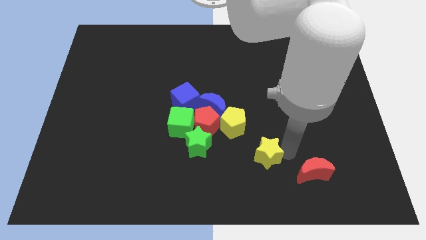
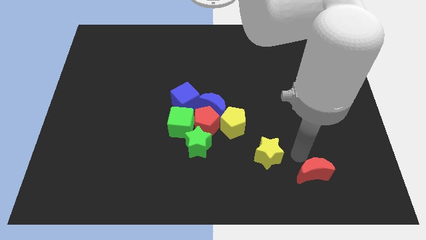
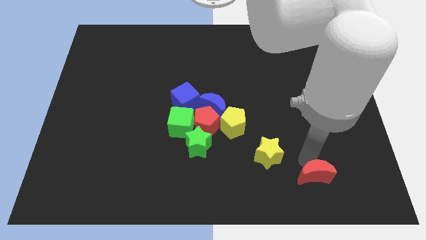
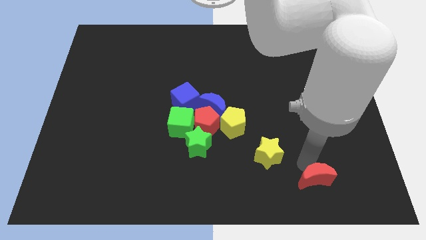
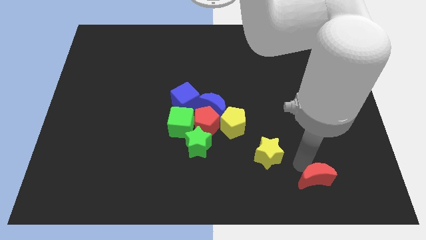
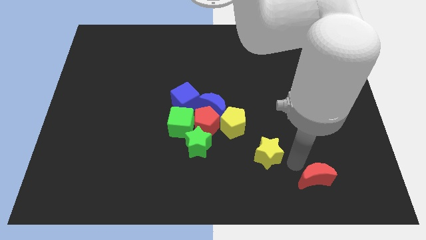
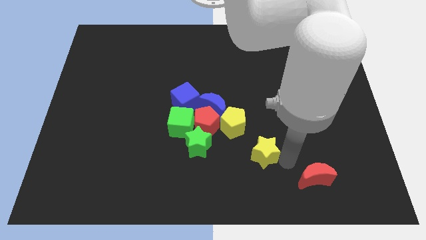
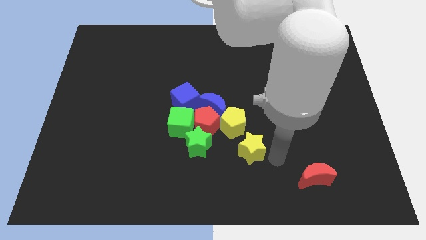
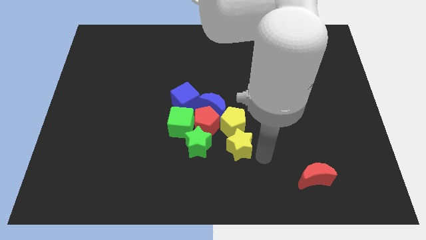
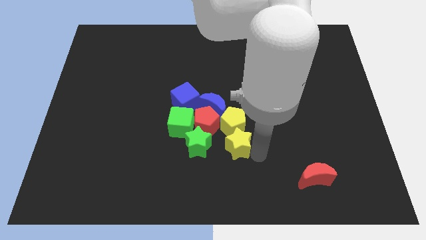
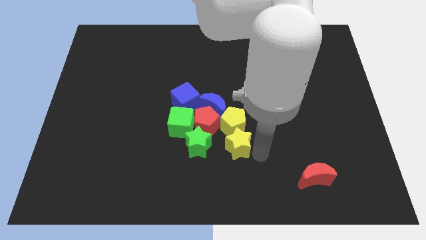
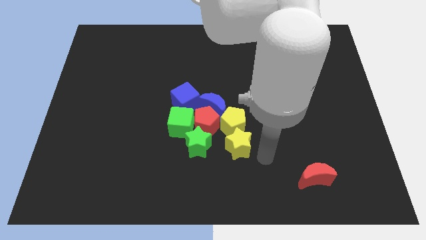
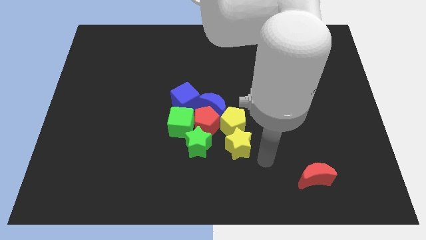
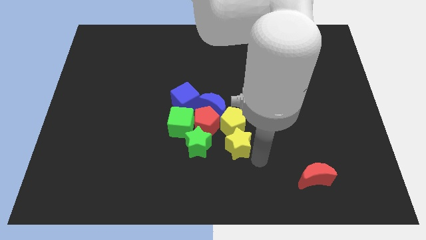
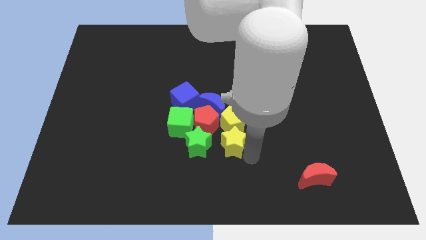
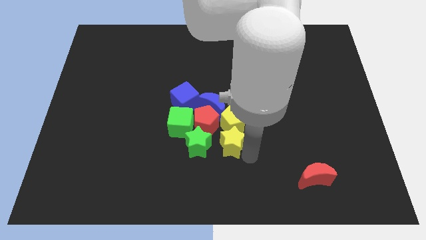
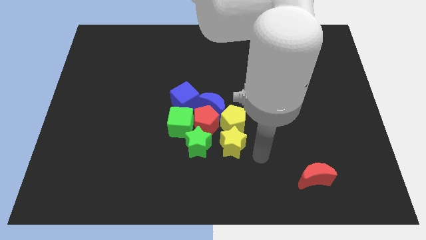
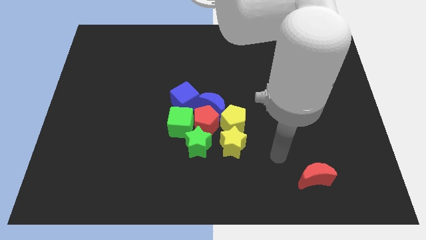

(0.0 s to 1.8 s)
place the yellow star below the yellow pentagon

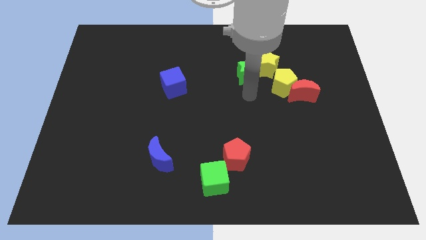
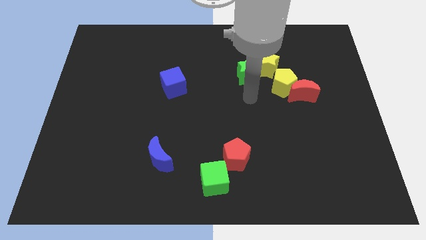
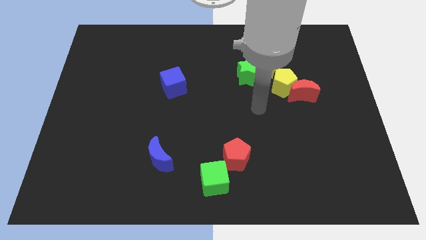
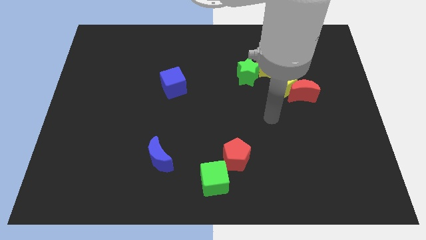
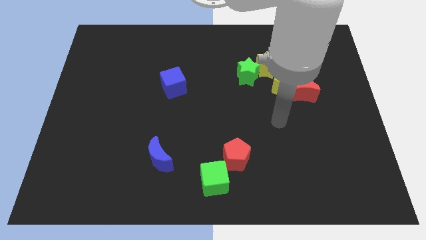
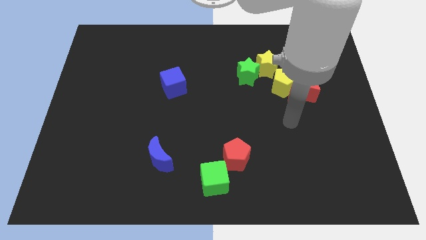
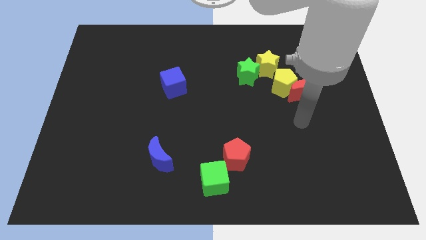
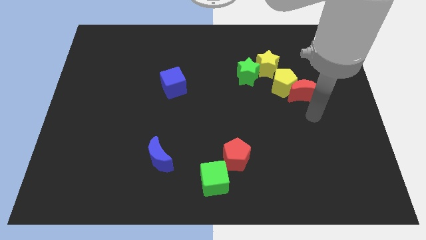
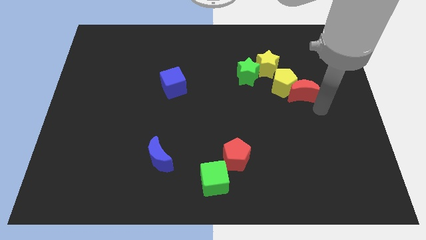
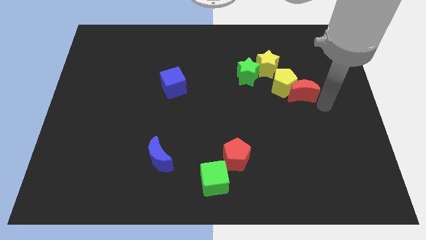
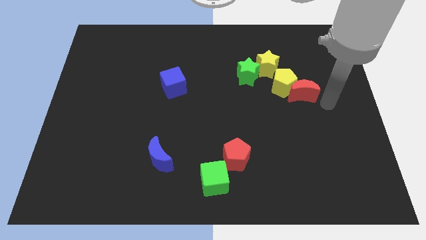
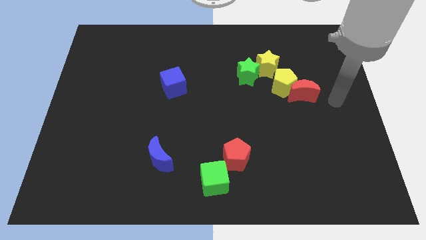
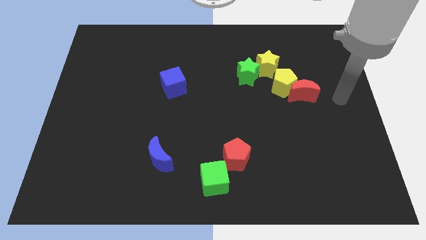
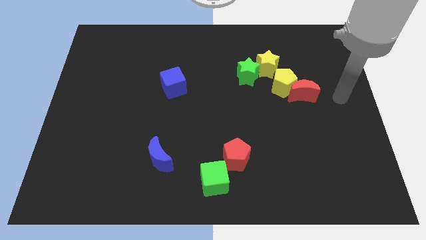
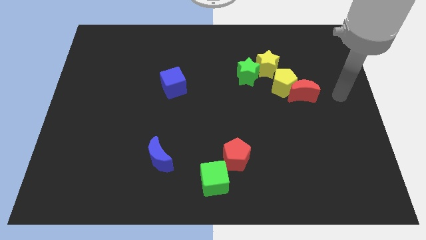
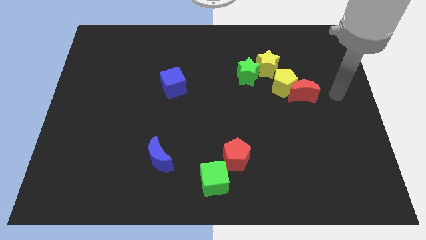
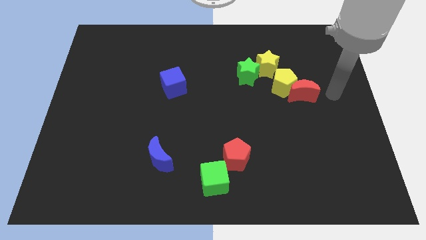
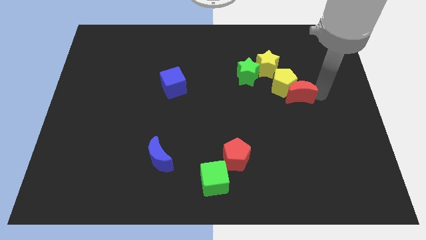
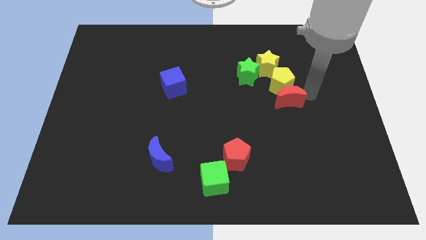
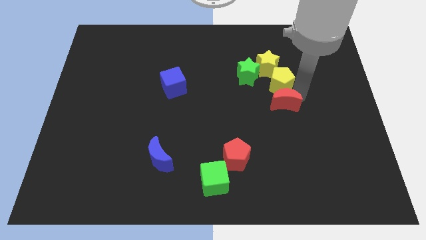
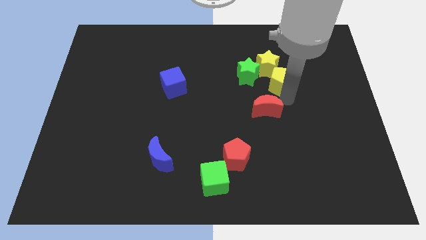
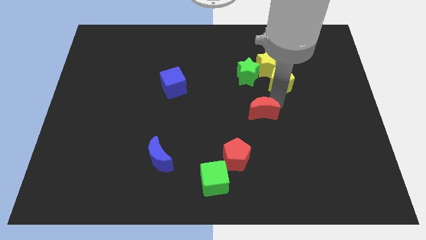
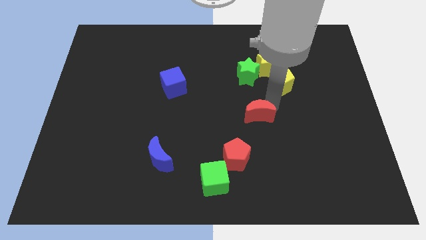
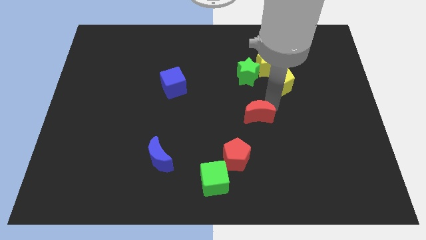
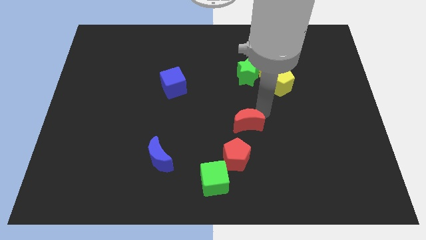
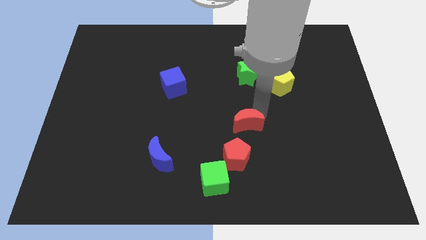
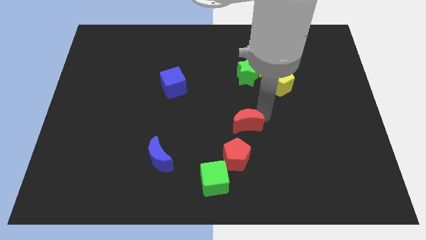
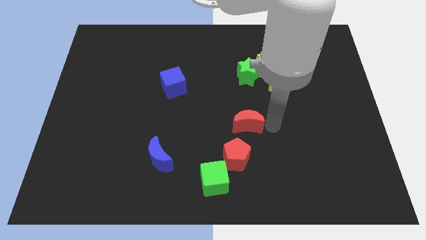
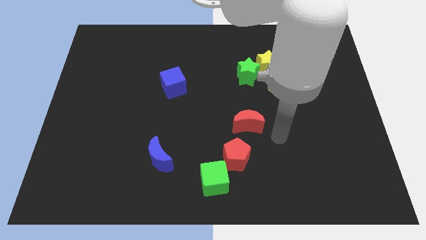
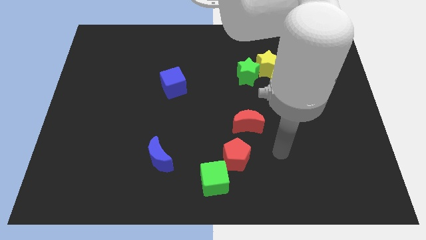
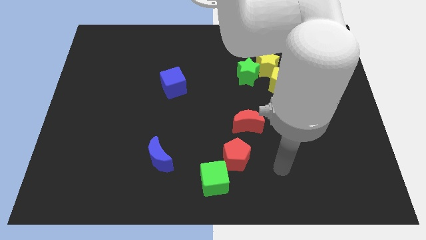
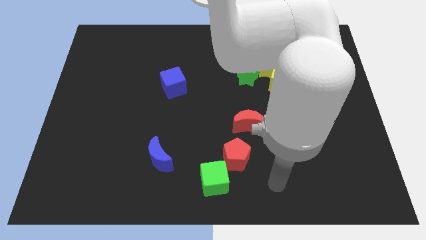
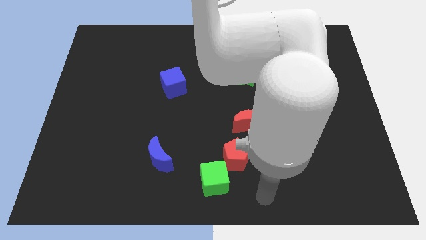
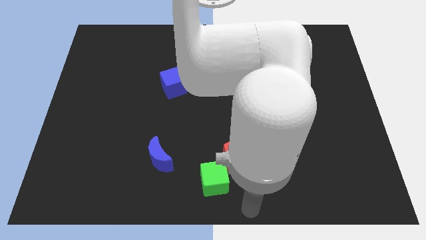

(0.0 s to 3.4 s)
push the red crescent to the bottom left of the yellow pentagon

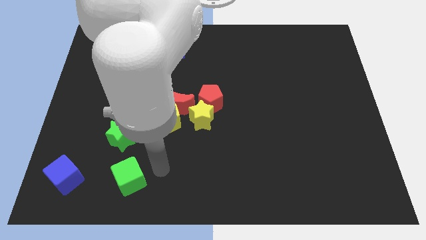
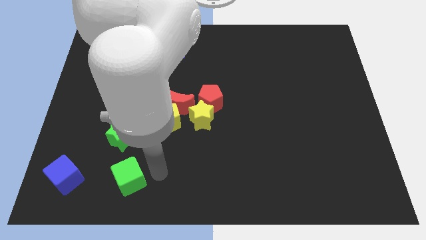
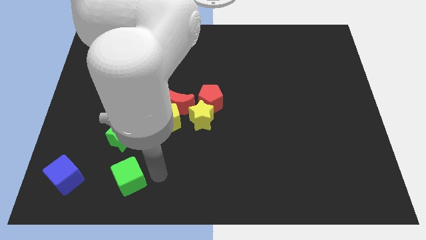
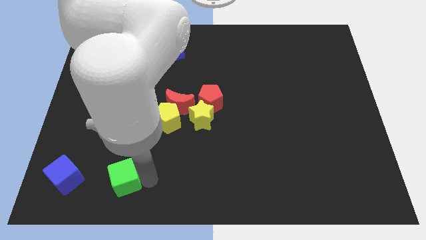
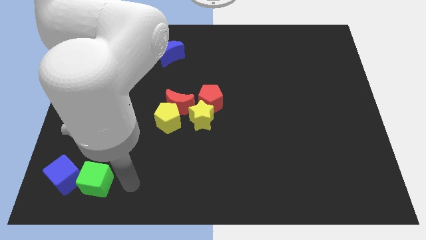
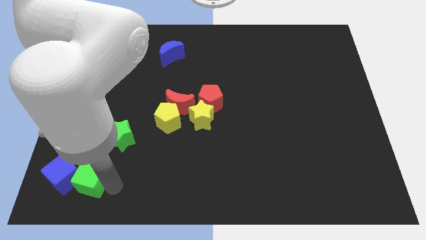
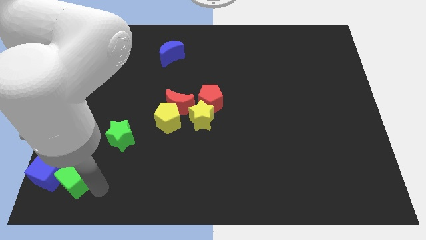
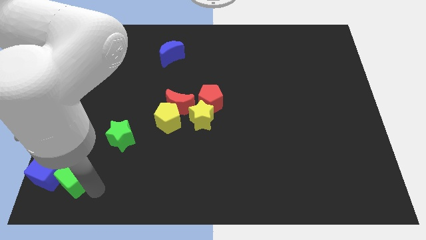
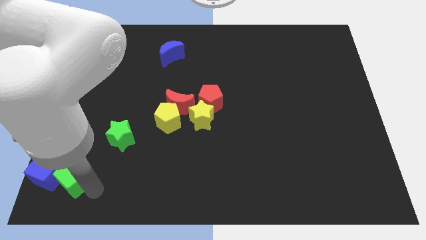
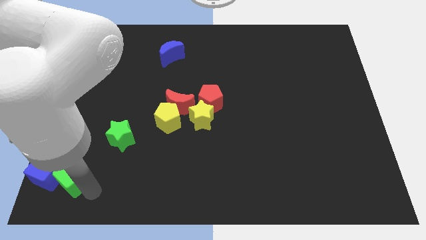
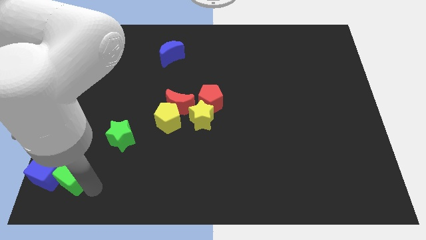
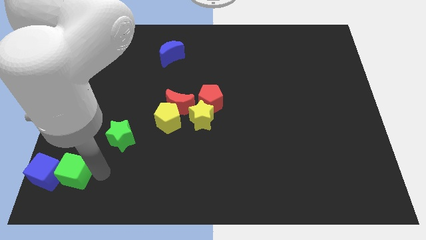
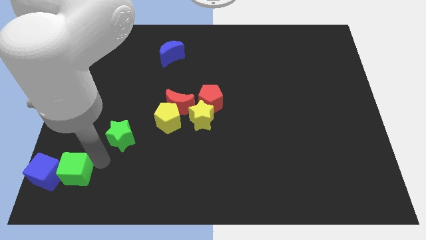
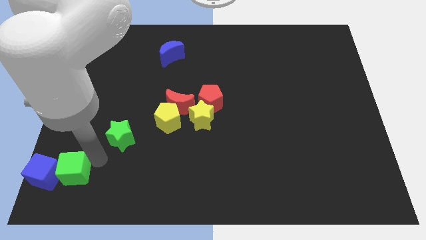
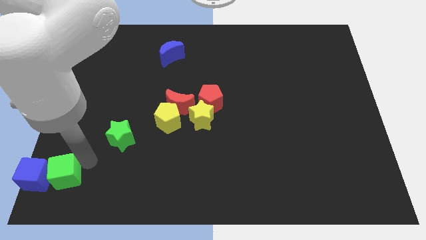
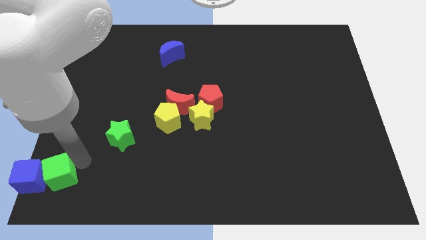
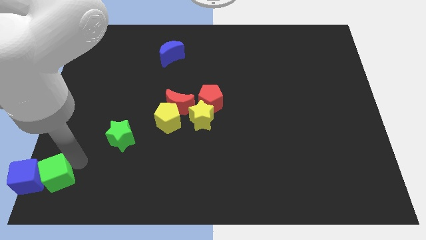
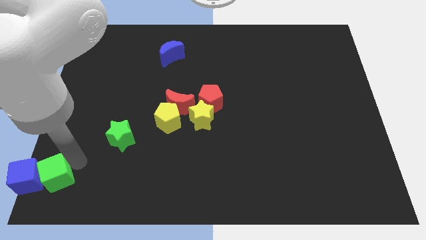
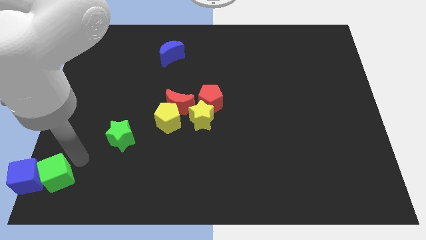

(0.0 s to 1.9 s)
push the green cube into blue cube

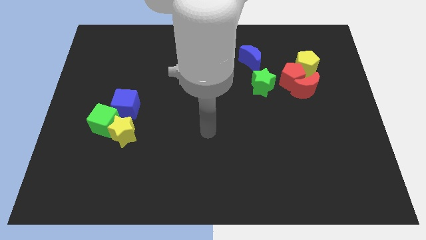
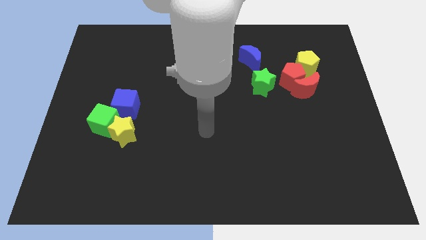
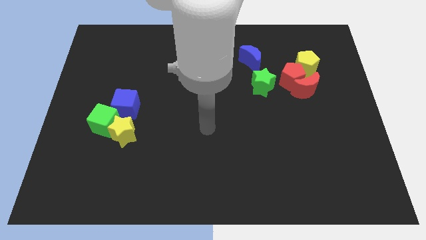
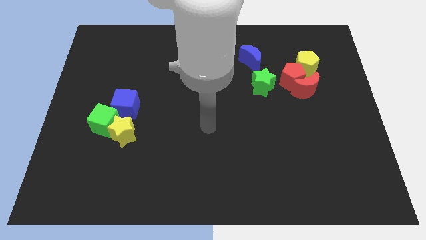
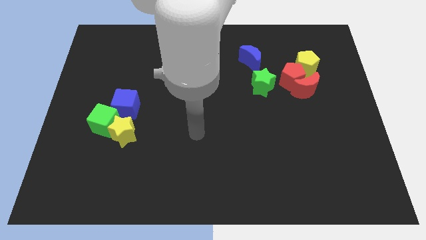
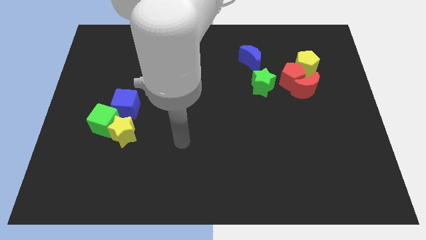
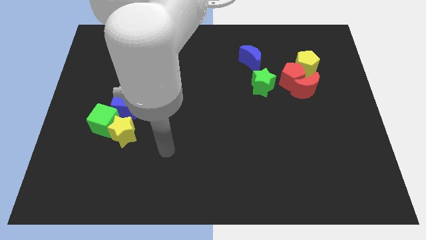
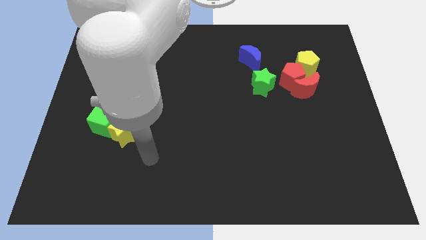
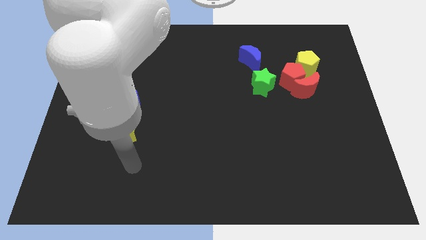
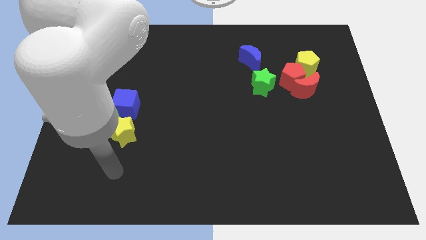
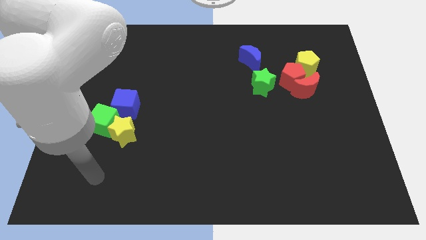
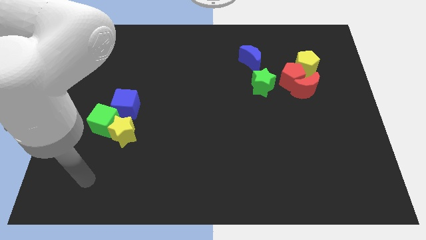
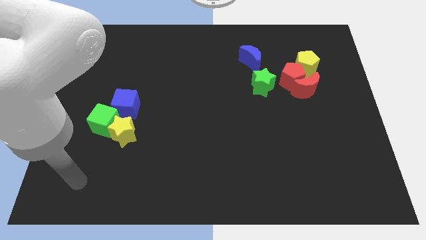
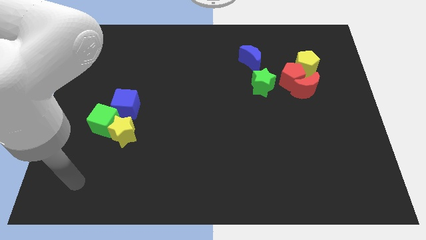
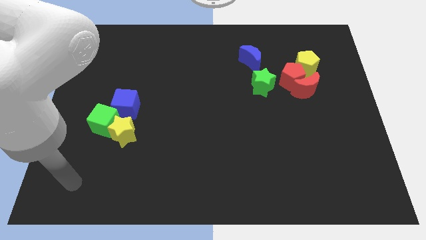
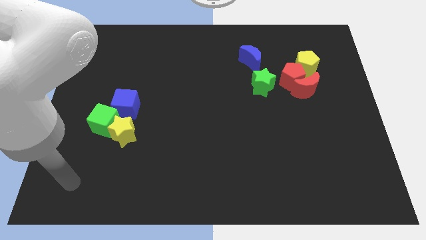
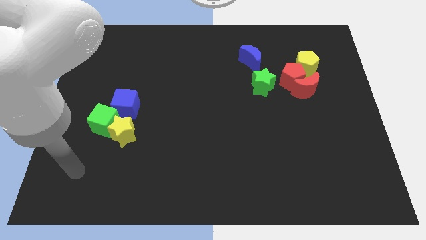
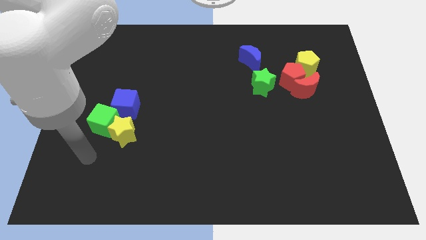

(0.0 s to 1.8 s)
point your arm below the green cube
